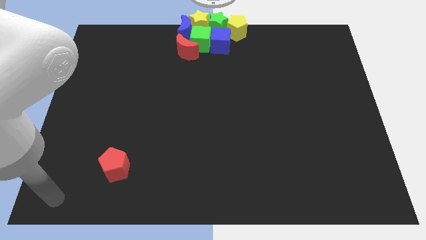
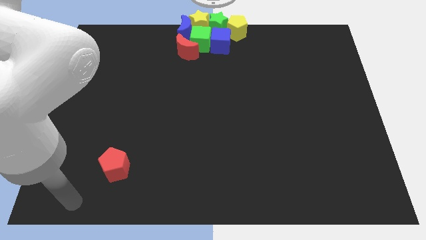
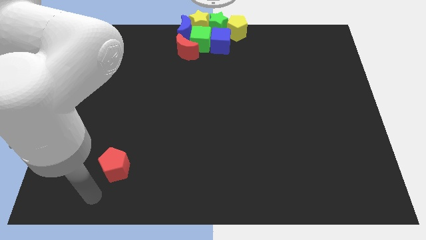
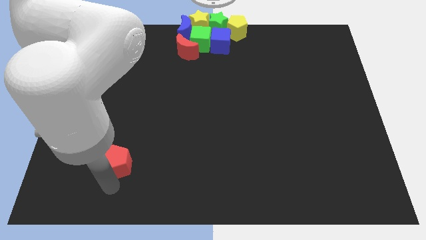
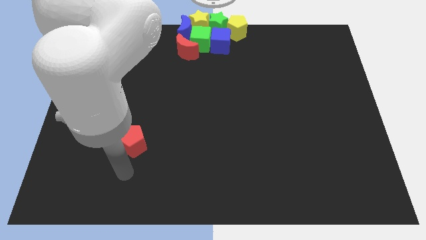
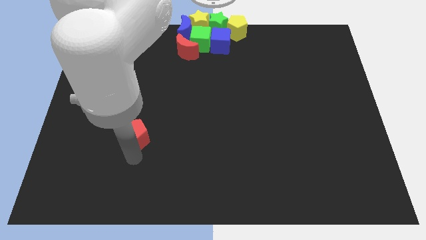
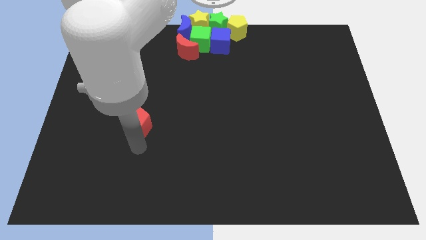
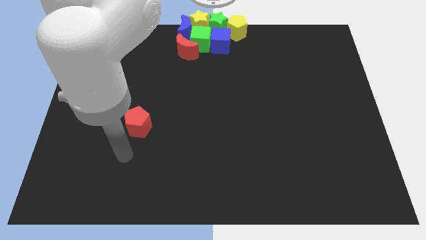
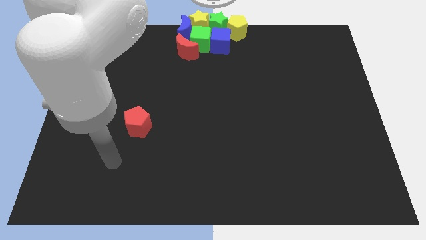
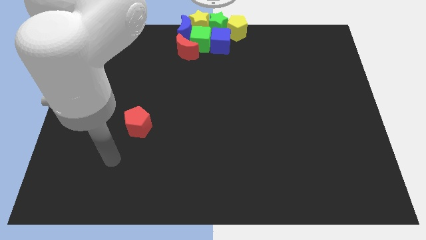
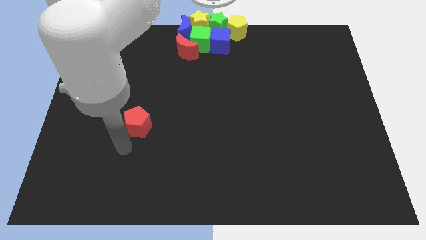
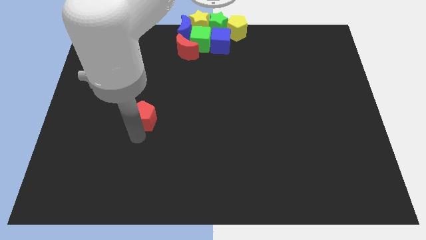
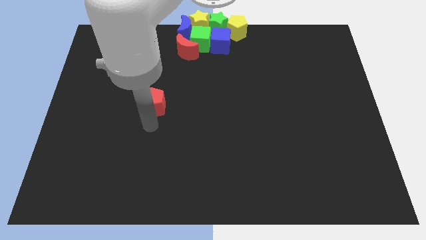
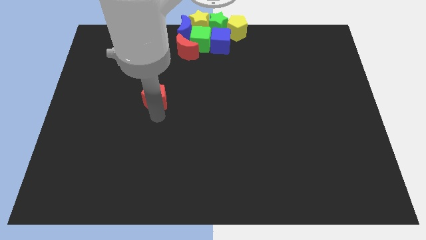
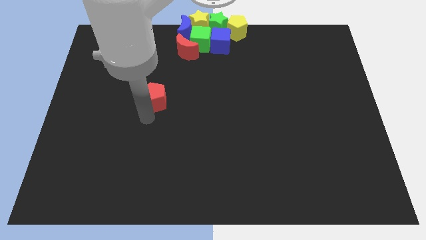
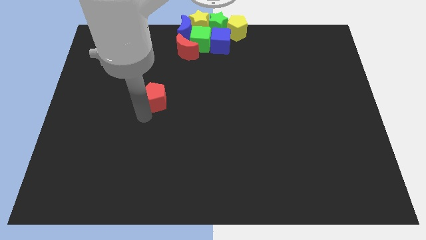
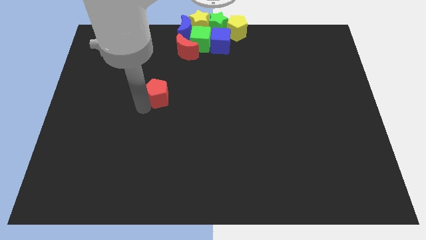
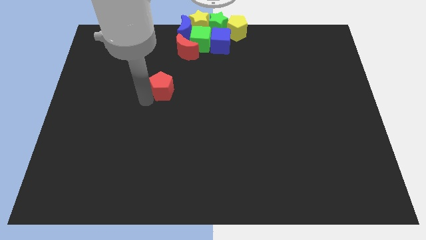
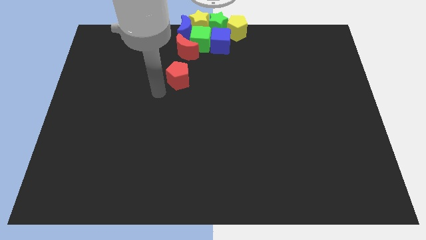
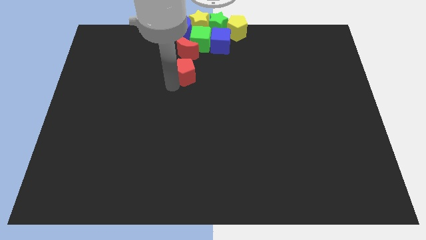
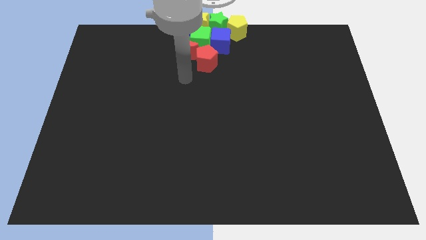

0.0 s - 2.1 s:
move red pentagon set in the objects middle of the board

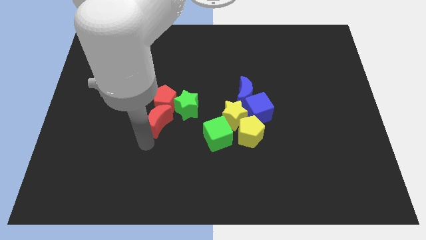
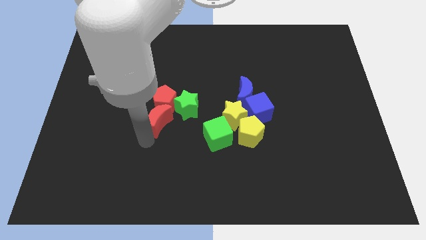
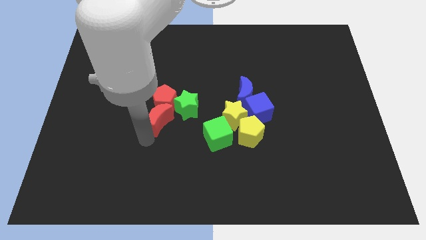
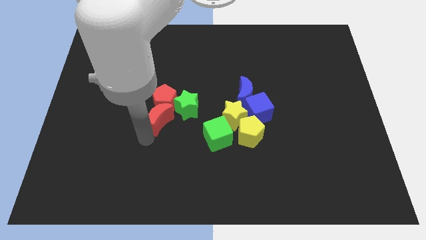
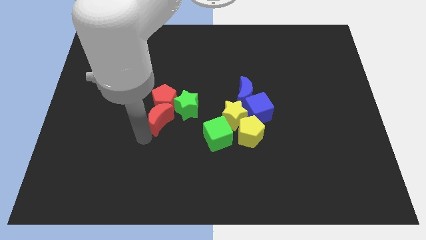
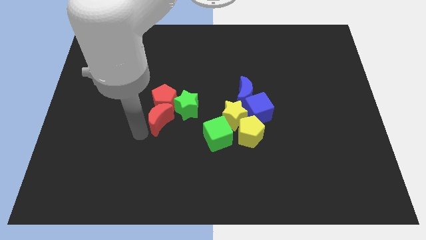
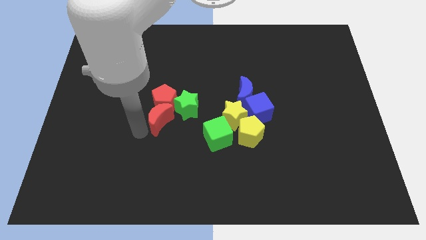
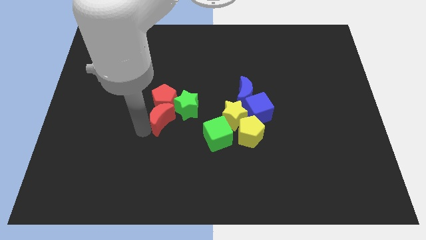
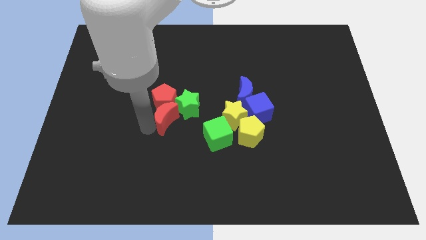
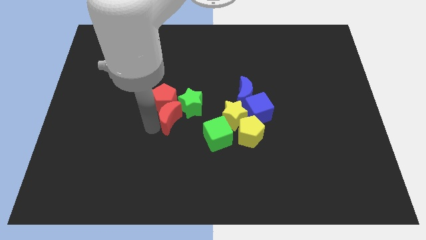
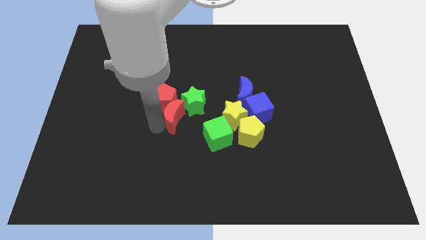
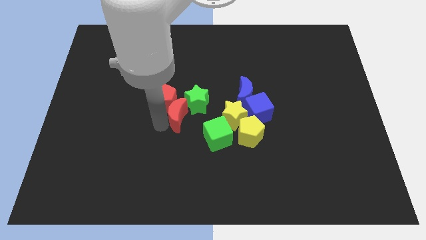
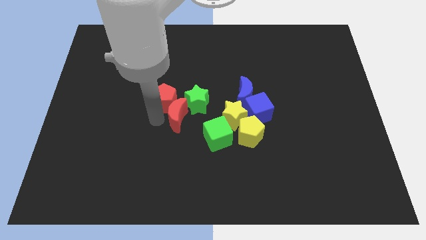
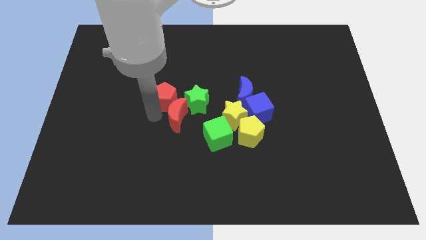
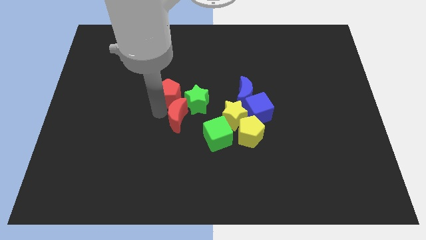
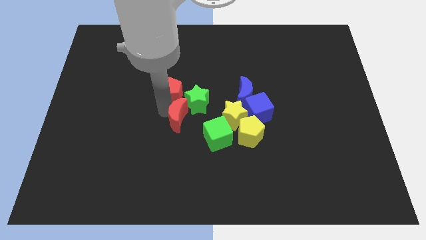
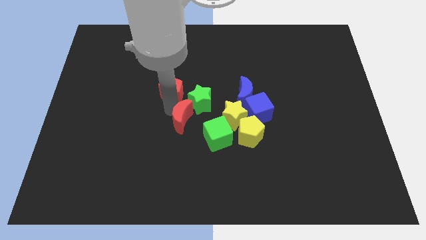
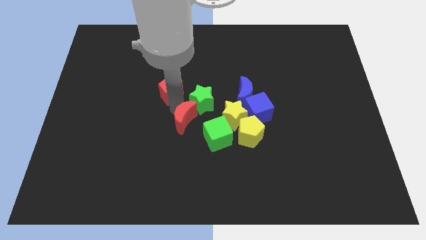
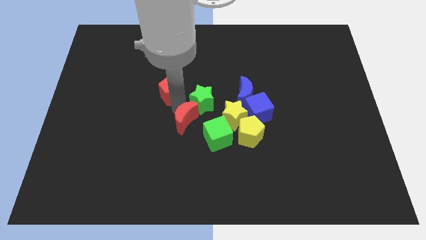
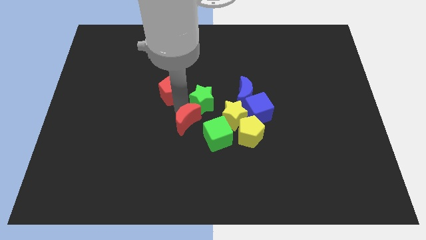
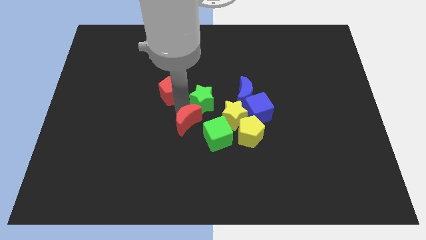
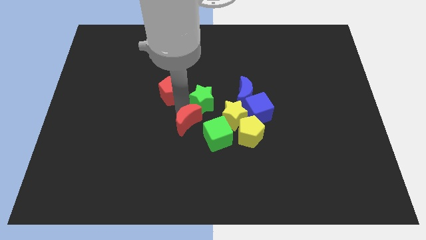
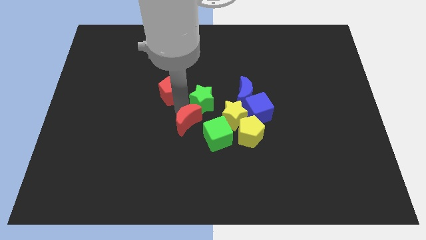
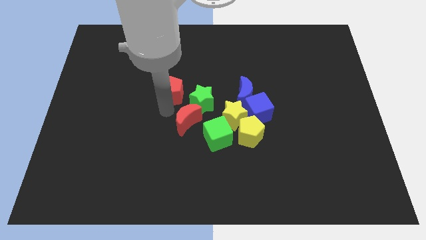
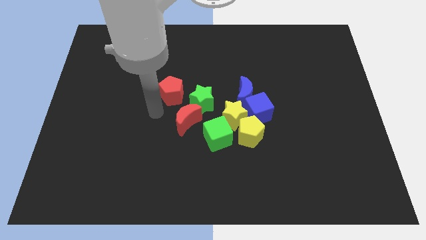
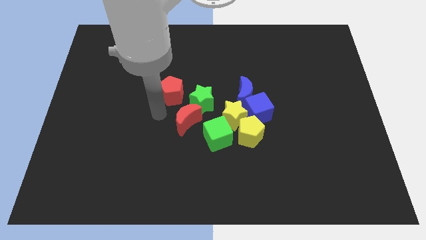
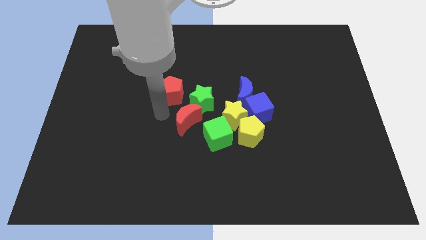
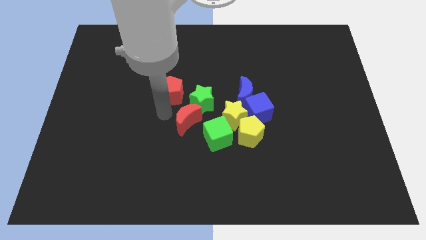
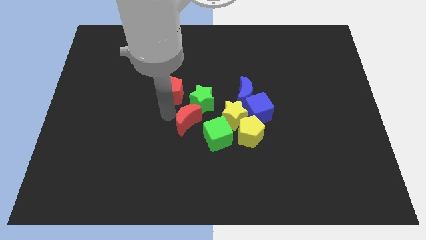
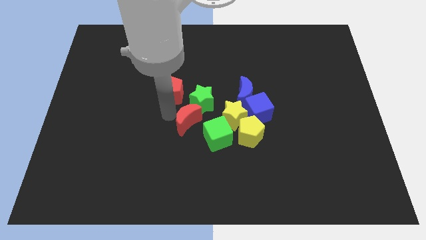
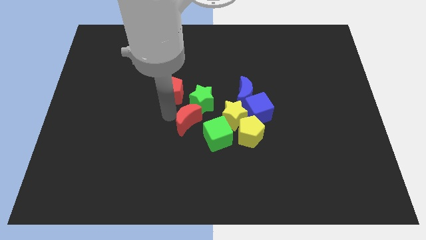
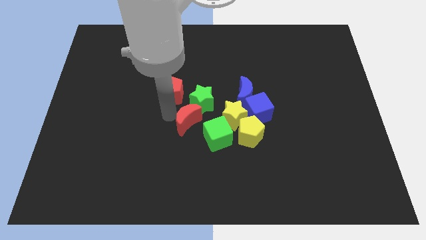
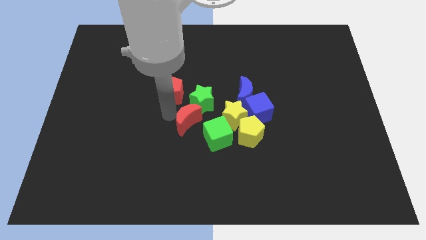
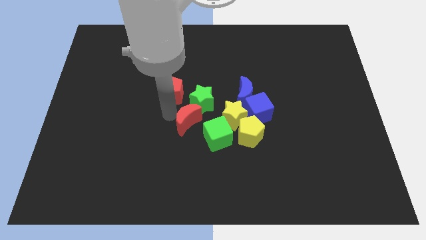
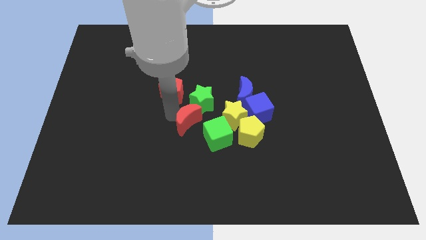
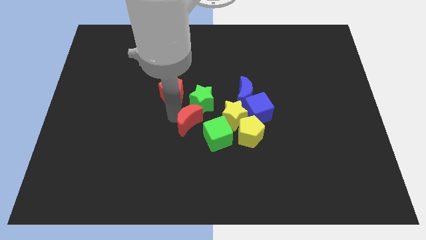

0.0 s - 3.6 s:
move the red crescent close to the green cube

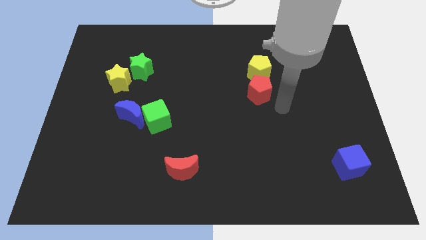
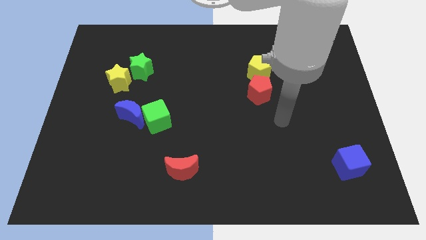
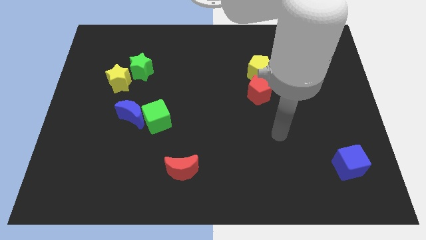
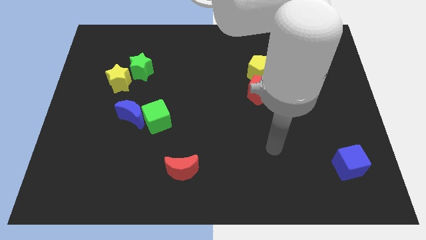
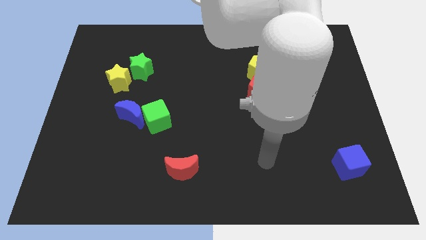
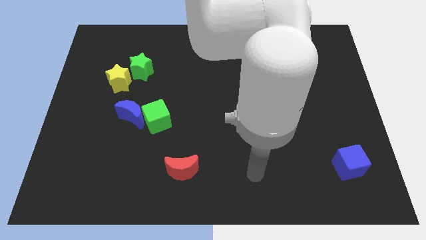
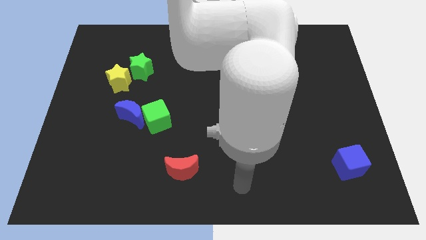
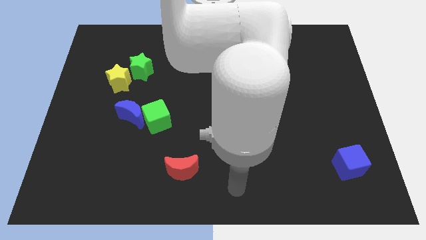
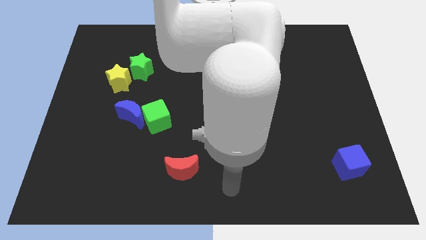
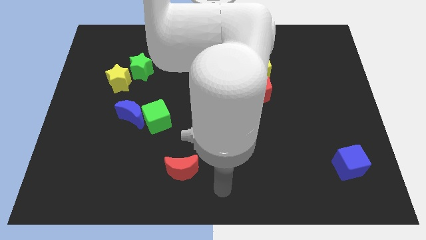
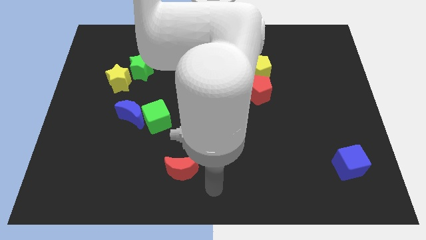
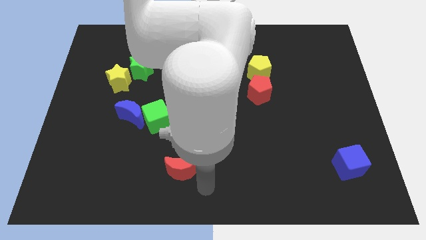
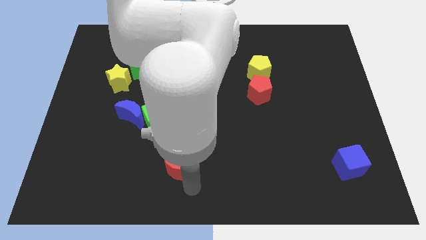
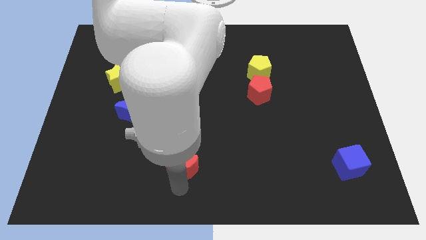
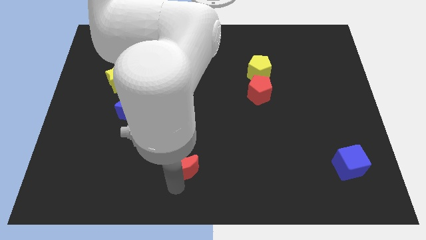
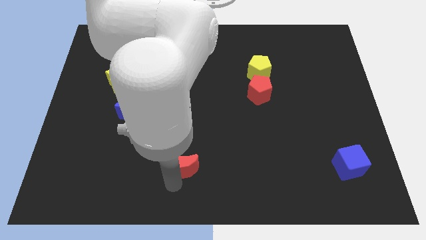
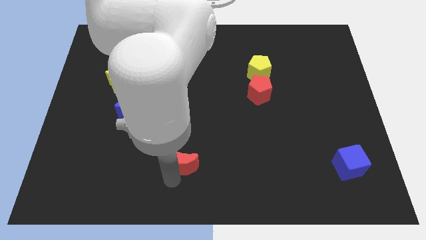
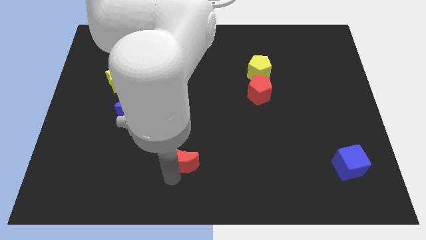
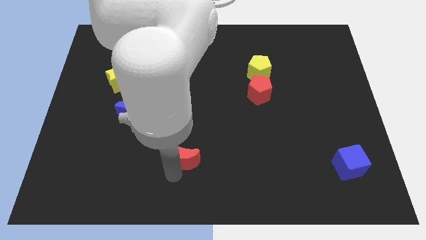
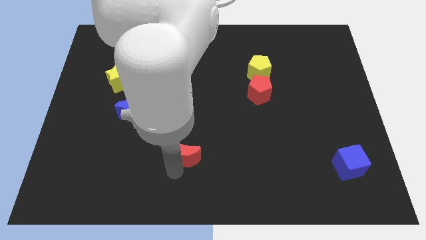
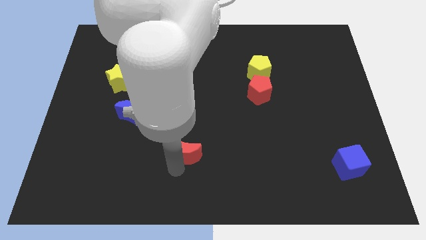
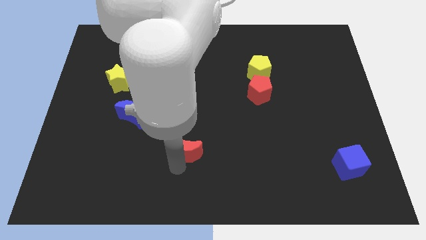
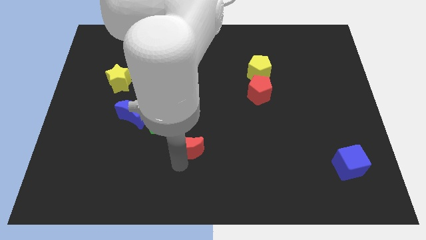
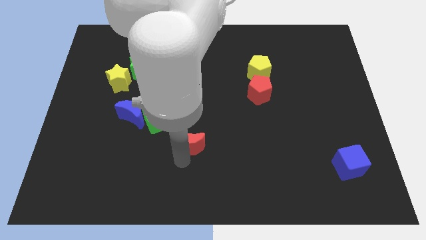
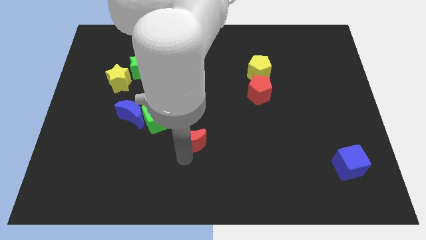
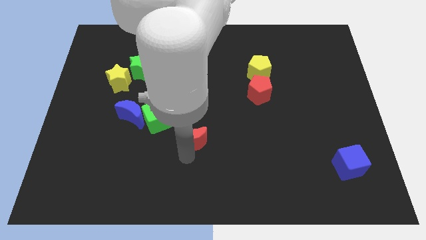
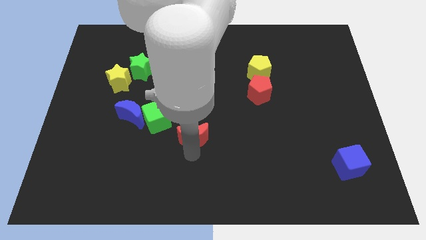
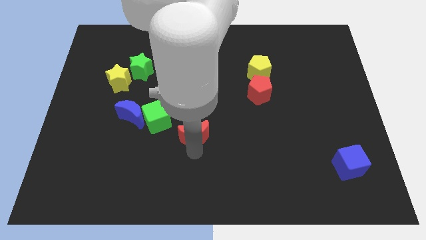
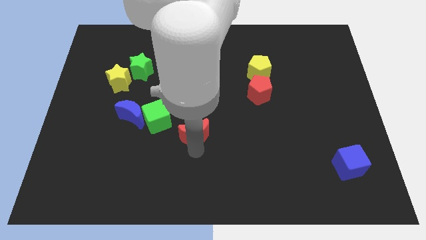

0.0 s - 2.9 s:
push the red crescent towards the center of the board

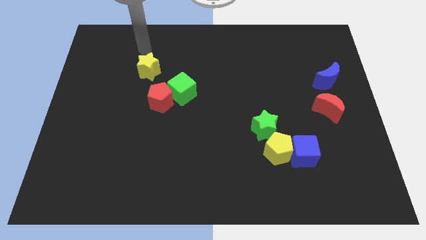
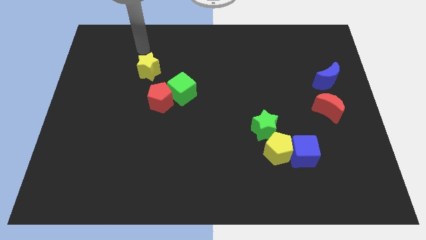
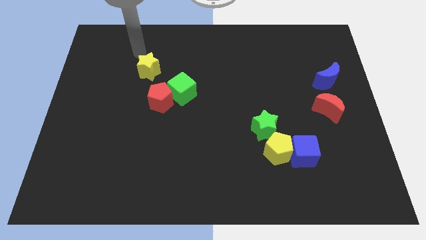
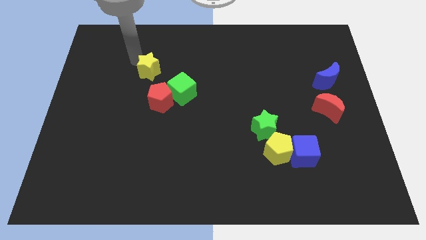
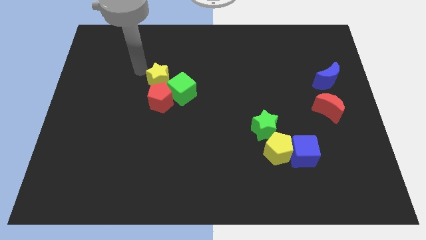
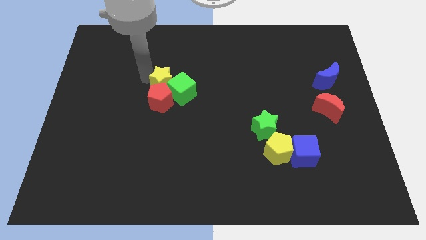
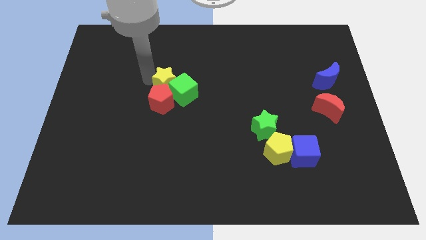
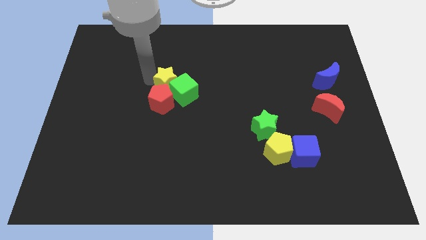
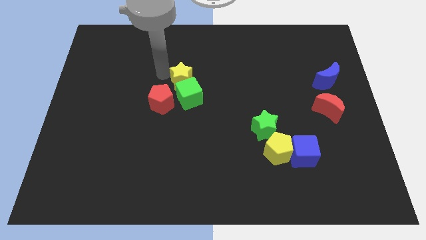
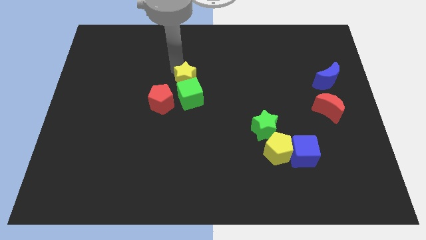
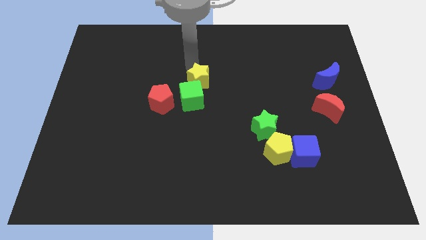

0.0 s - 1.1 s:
place the yellow star above the green cube
